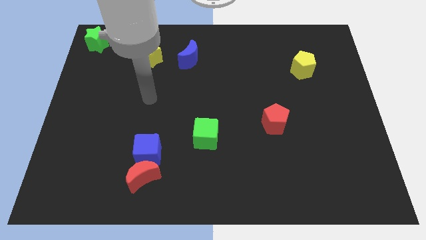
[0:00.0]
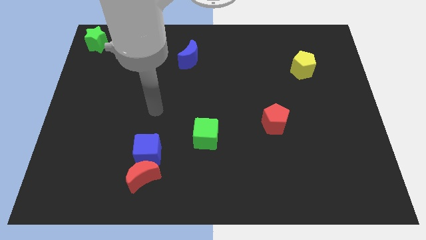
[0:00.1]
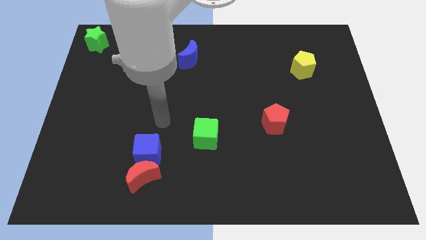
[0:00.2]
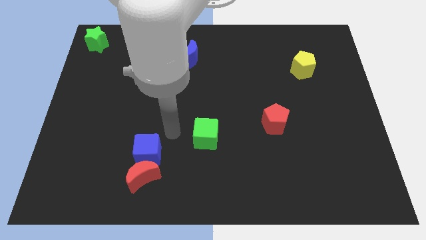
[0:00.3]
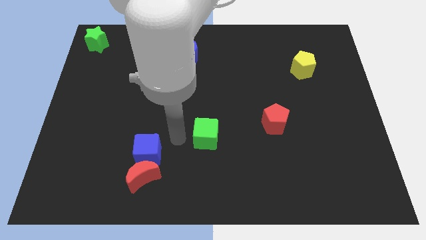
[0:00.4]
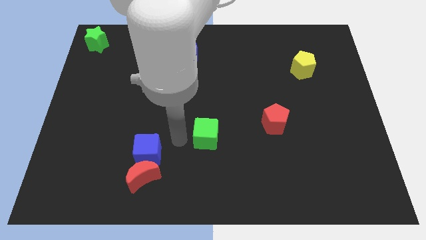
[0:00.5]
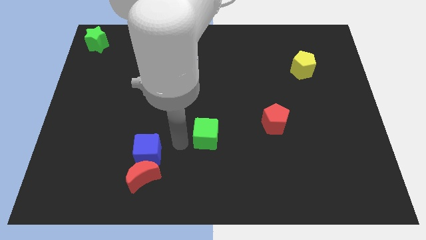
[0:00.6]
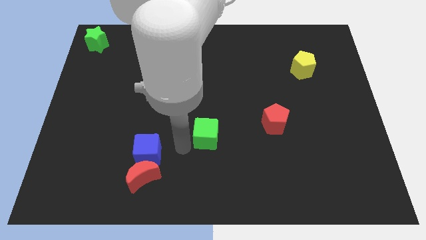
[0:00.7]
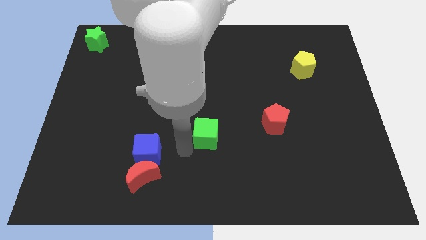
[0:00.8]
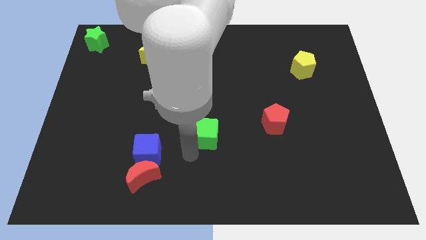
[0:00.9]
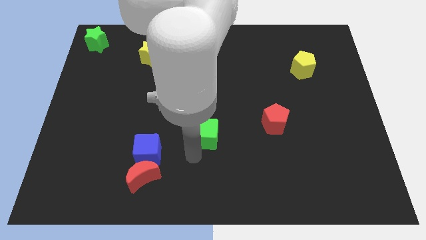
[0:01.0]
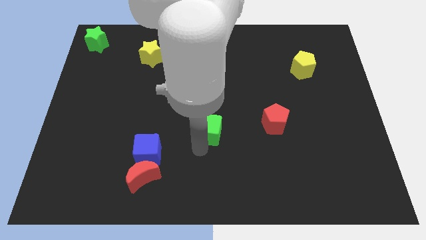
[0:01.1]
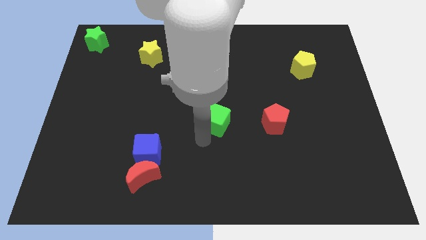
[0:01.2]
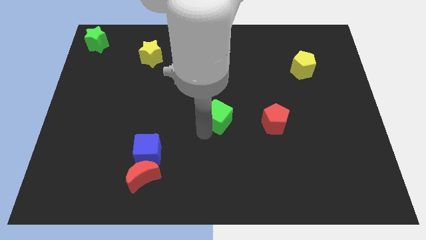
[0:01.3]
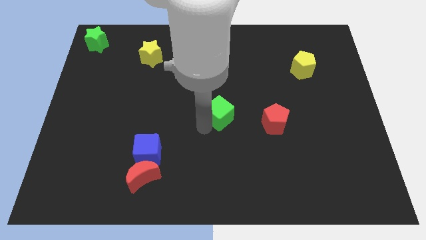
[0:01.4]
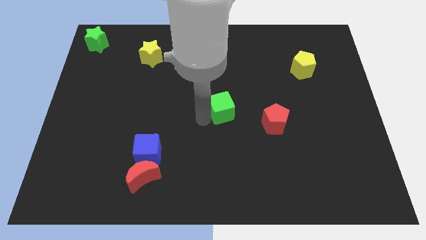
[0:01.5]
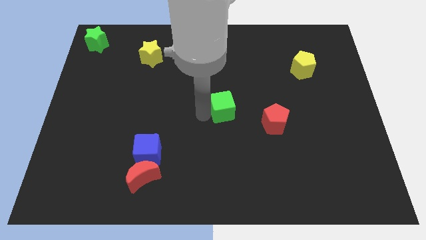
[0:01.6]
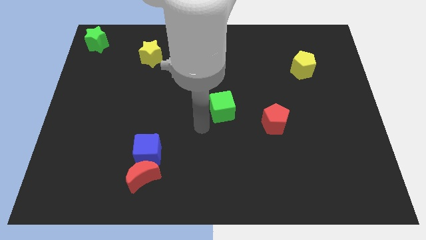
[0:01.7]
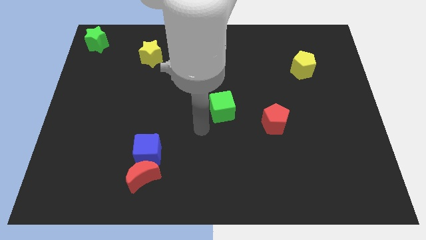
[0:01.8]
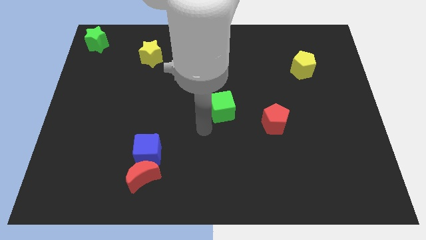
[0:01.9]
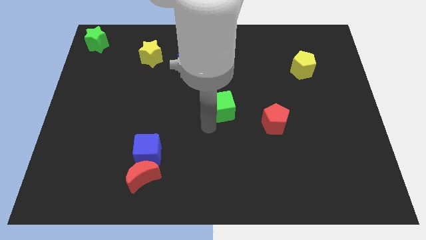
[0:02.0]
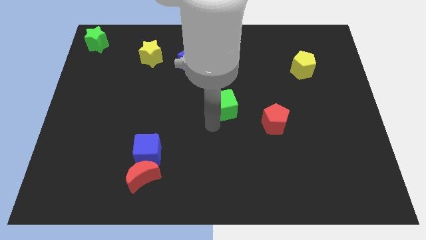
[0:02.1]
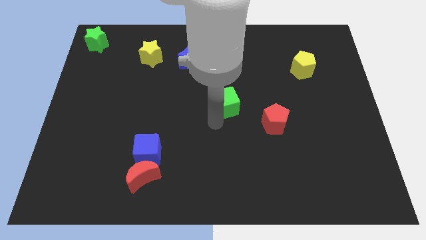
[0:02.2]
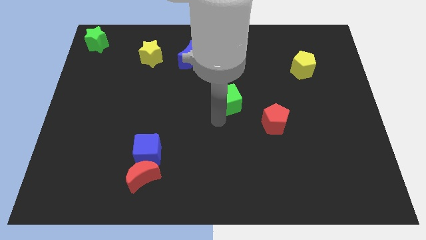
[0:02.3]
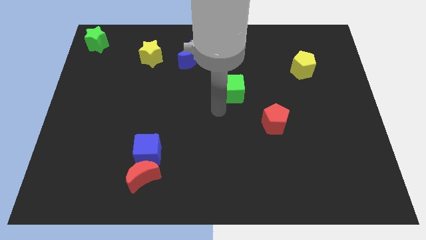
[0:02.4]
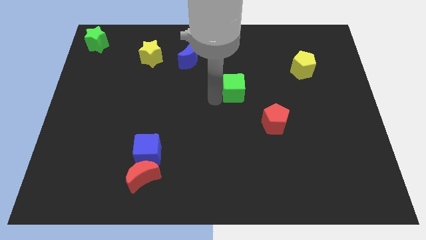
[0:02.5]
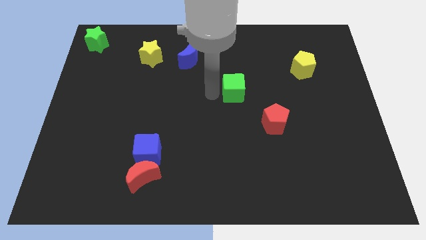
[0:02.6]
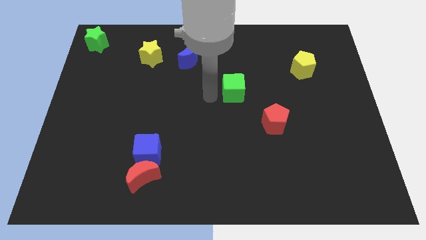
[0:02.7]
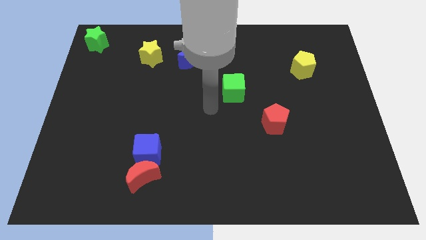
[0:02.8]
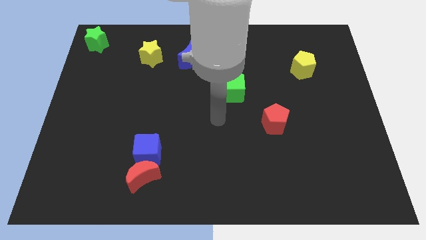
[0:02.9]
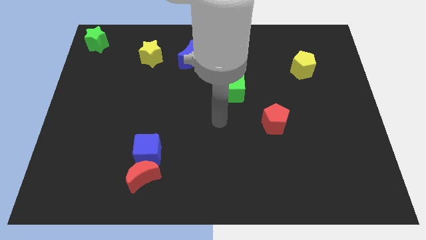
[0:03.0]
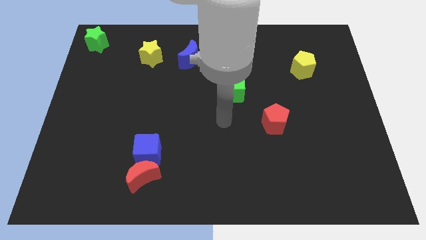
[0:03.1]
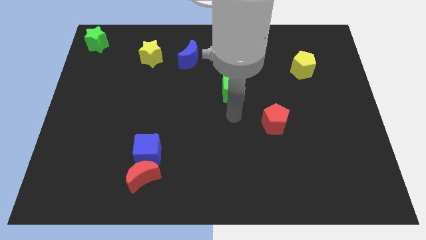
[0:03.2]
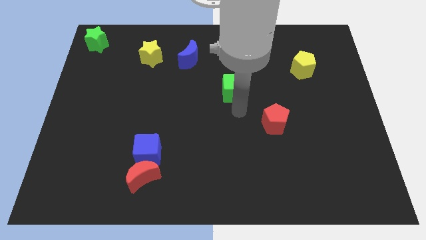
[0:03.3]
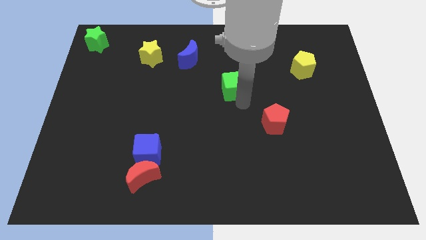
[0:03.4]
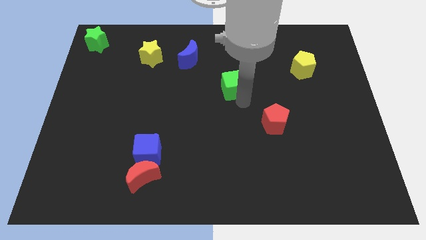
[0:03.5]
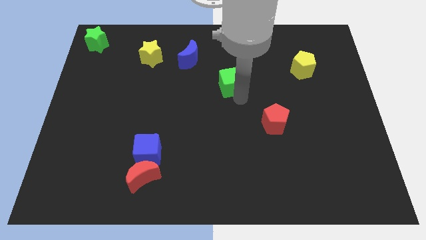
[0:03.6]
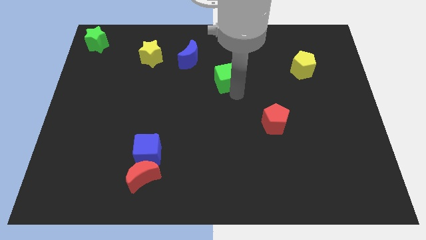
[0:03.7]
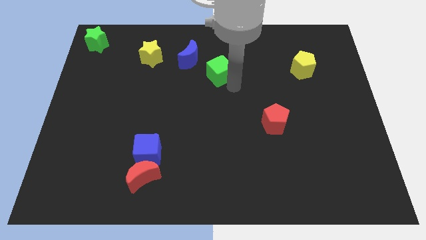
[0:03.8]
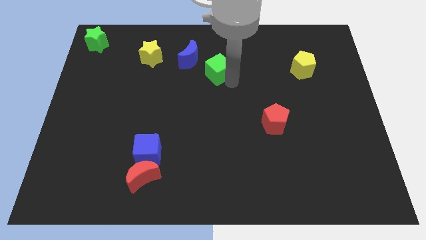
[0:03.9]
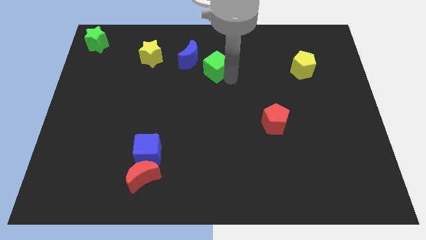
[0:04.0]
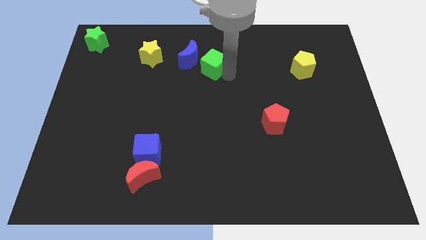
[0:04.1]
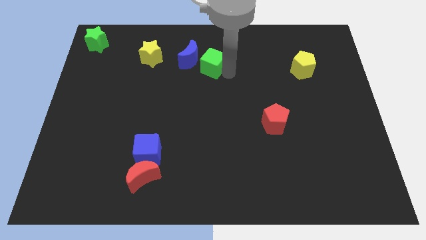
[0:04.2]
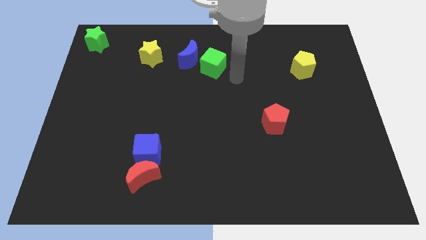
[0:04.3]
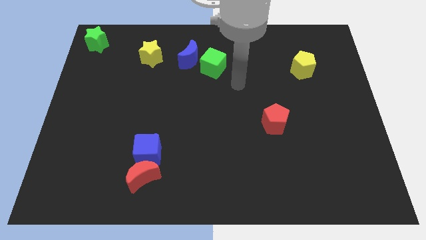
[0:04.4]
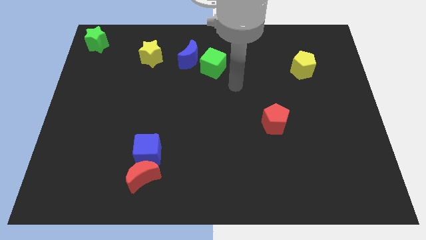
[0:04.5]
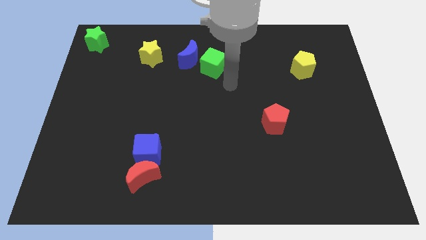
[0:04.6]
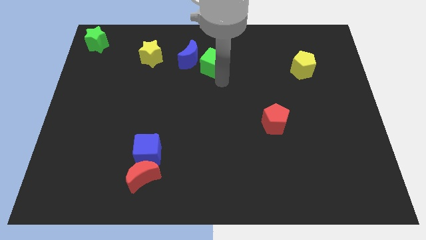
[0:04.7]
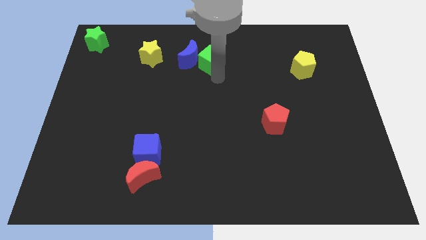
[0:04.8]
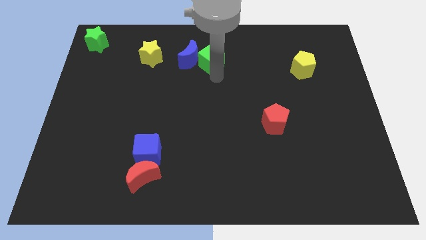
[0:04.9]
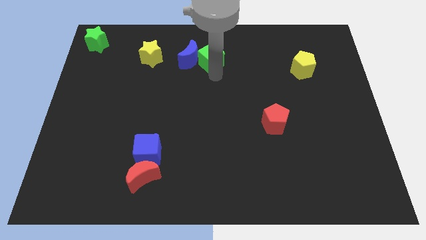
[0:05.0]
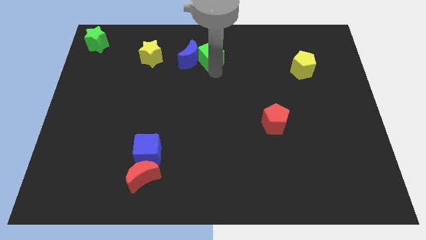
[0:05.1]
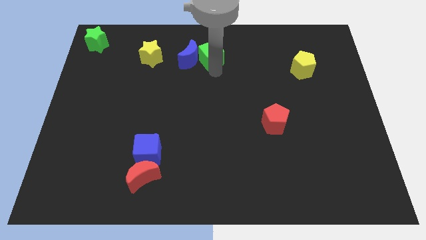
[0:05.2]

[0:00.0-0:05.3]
place the green cube to the right side of the blue moon

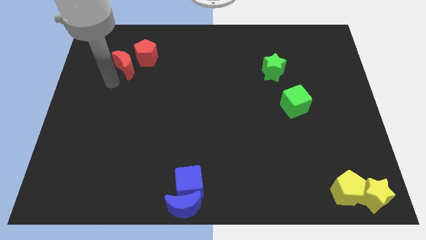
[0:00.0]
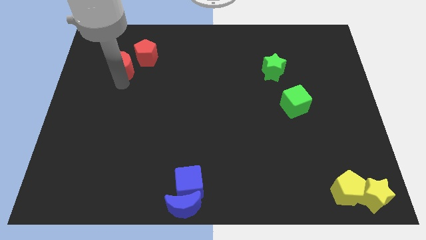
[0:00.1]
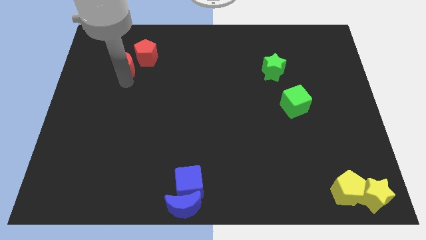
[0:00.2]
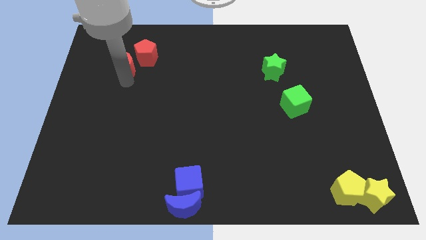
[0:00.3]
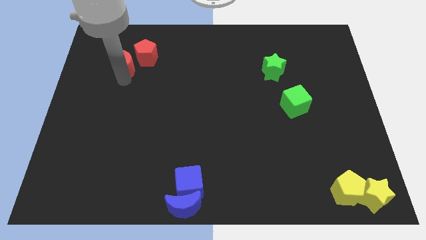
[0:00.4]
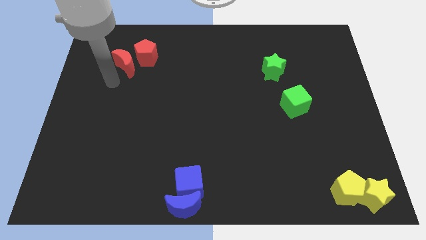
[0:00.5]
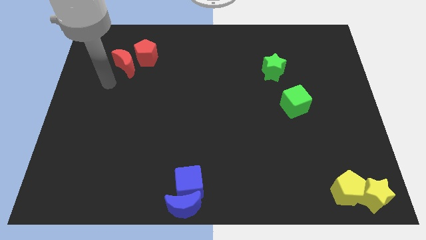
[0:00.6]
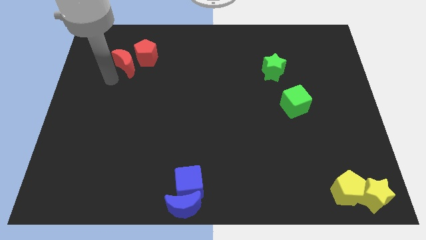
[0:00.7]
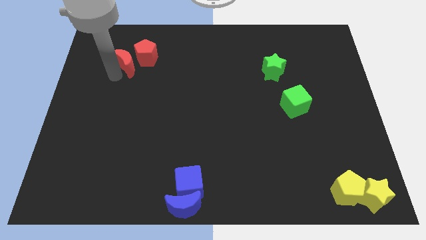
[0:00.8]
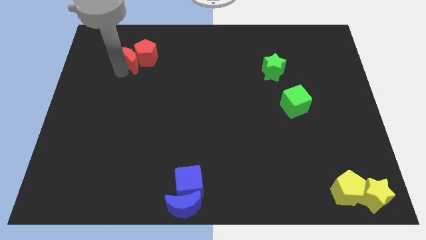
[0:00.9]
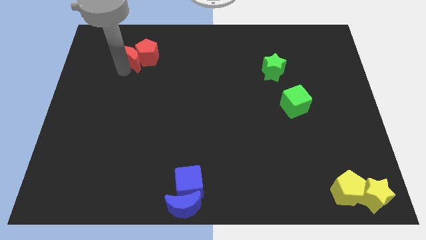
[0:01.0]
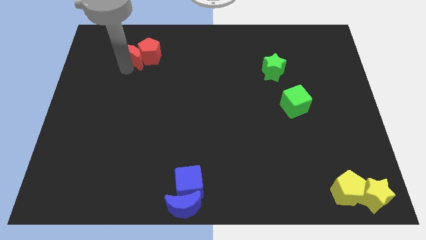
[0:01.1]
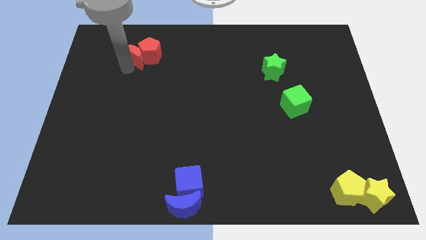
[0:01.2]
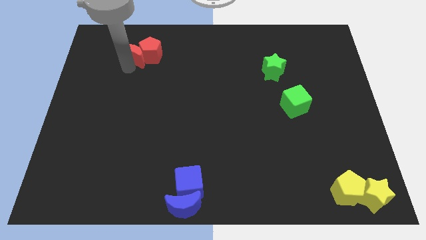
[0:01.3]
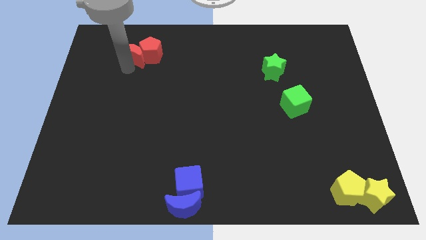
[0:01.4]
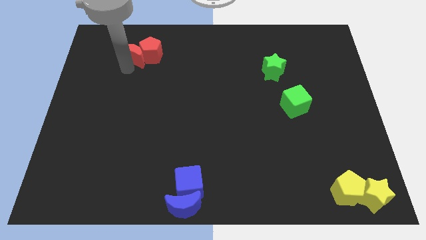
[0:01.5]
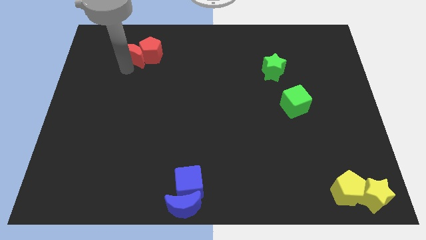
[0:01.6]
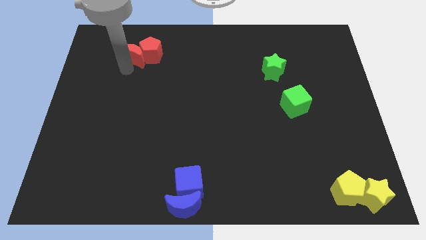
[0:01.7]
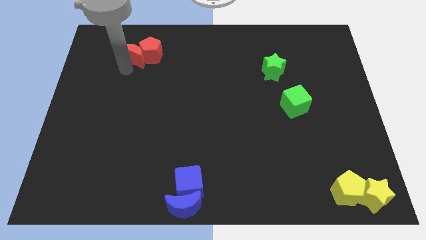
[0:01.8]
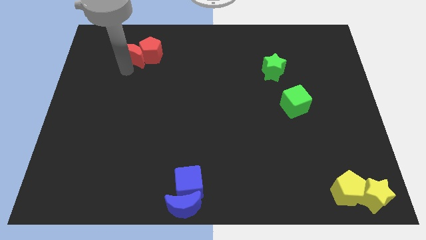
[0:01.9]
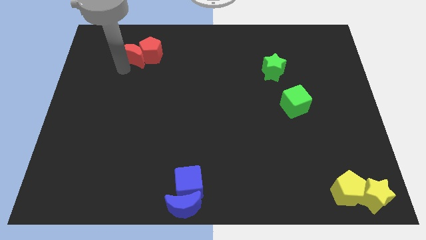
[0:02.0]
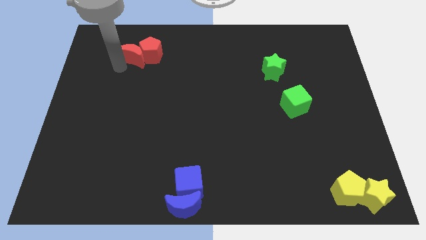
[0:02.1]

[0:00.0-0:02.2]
push the red moon into red pentagon

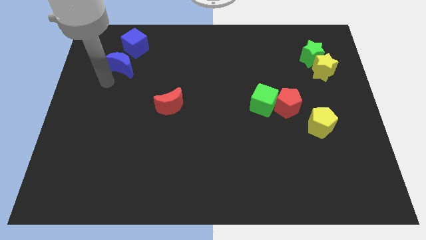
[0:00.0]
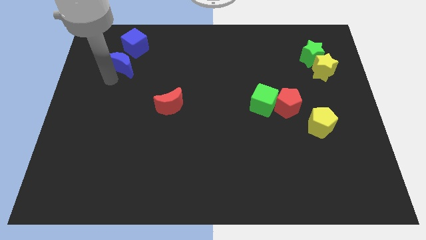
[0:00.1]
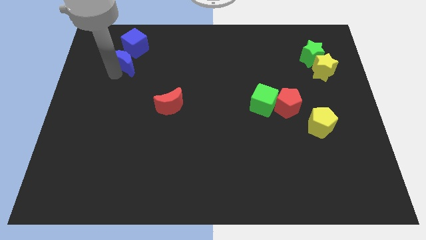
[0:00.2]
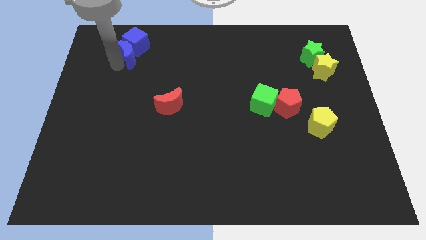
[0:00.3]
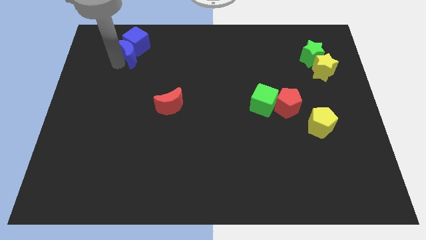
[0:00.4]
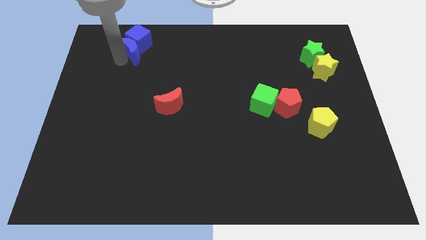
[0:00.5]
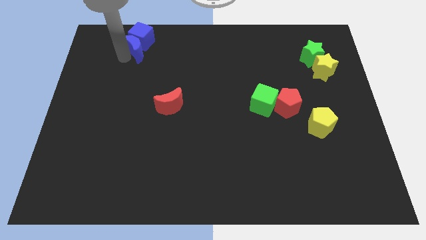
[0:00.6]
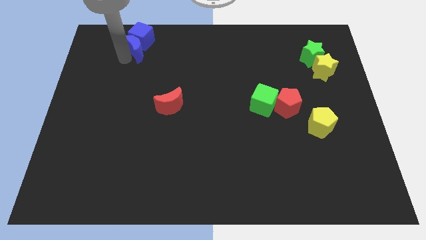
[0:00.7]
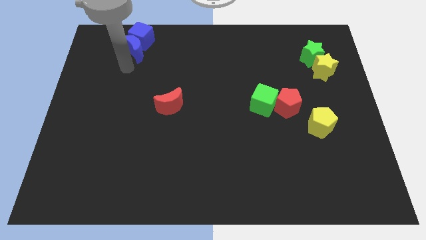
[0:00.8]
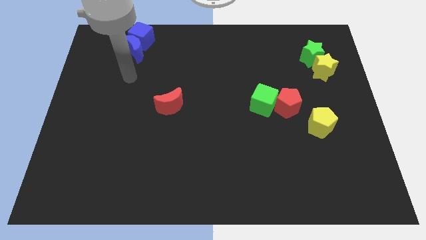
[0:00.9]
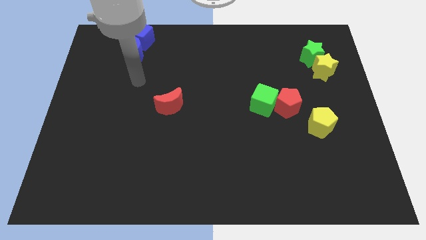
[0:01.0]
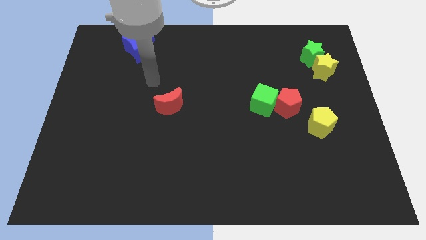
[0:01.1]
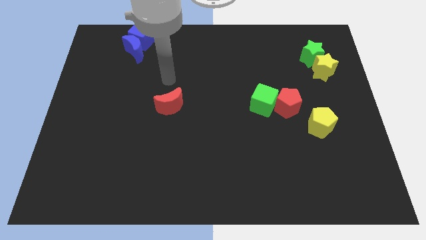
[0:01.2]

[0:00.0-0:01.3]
move blue cube blue moon towards the top of the board
